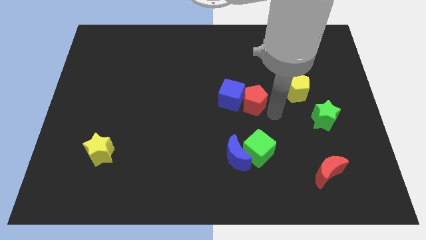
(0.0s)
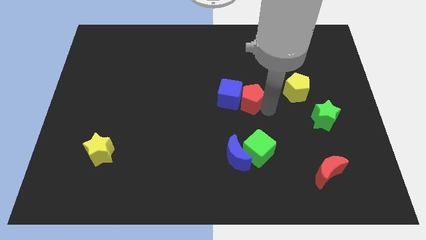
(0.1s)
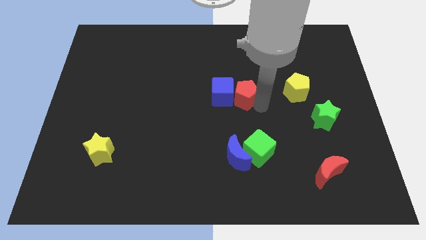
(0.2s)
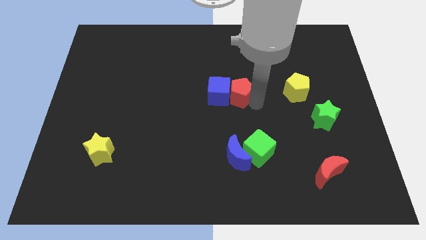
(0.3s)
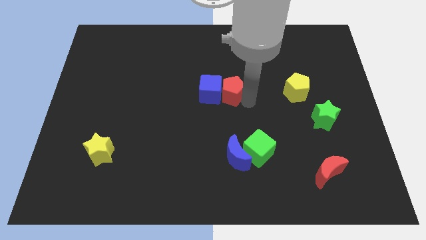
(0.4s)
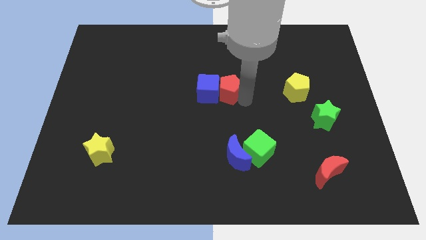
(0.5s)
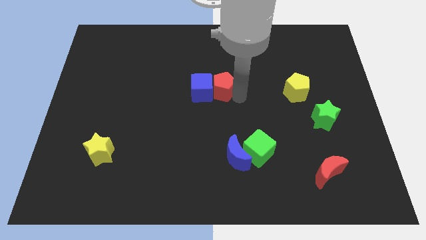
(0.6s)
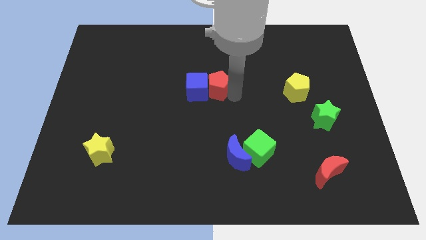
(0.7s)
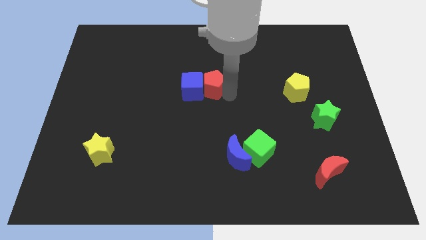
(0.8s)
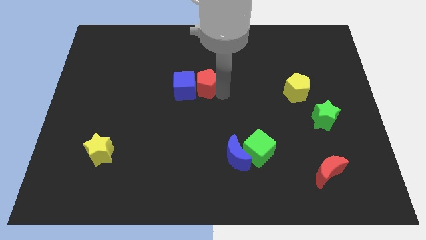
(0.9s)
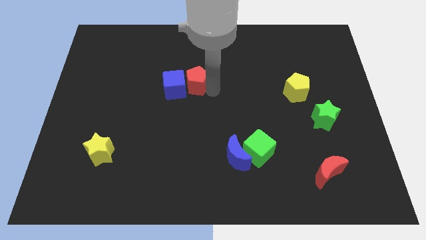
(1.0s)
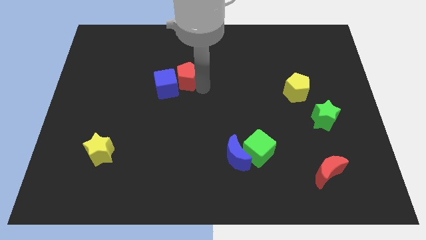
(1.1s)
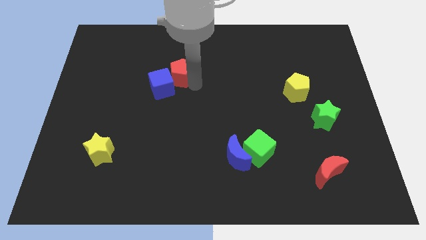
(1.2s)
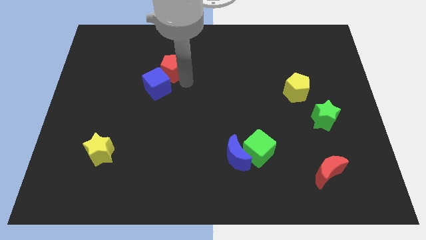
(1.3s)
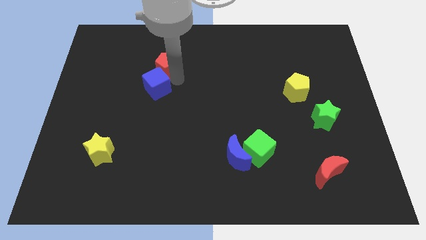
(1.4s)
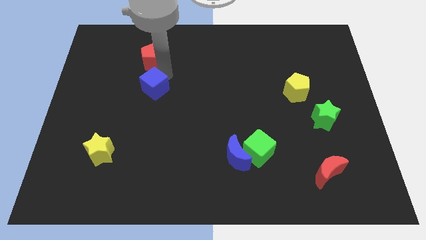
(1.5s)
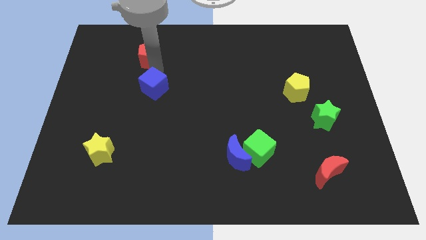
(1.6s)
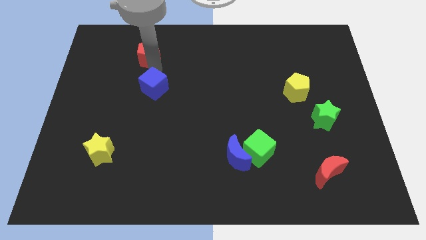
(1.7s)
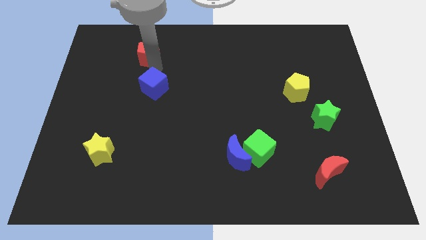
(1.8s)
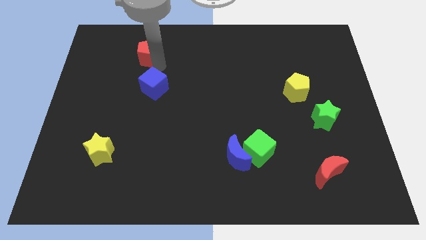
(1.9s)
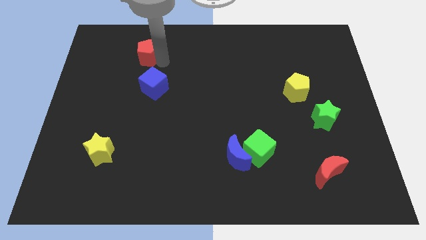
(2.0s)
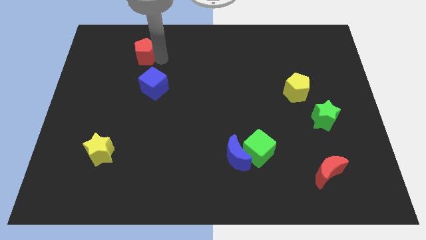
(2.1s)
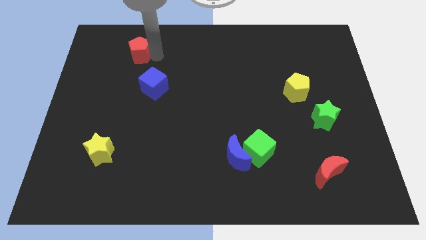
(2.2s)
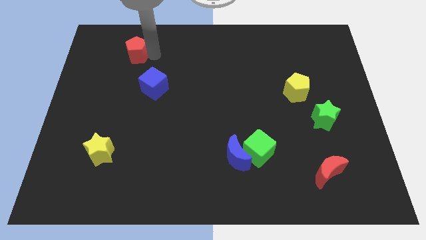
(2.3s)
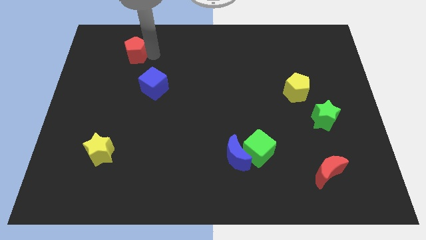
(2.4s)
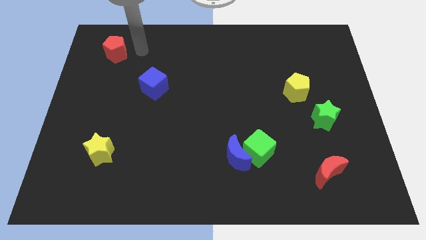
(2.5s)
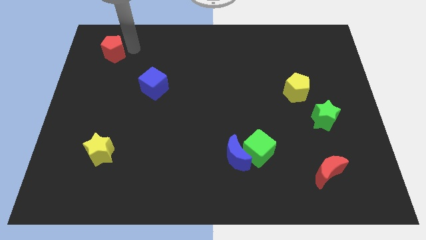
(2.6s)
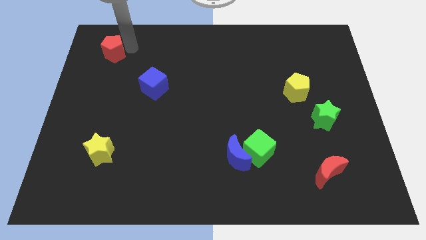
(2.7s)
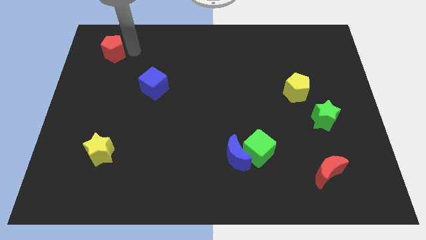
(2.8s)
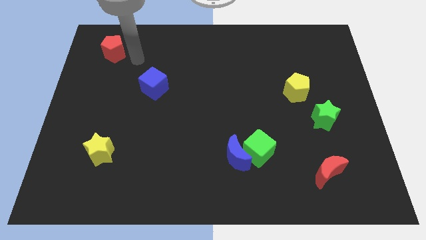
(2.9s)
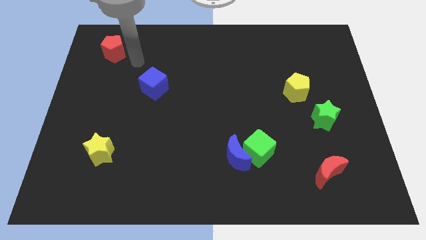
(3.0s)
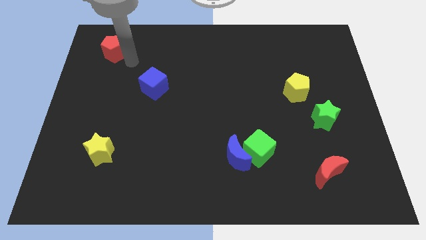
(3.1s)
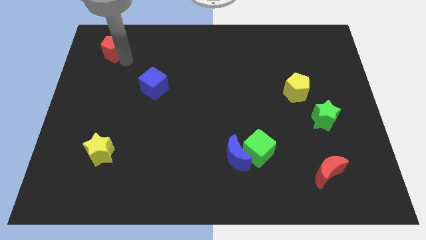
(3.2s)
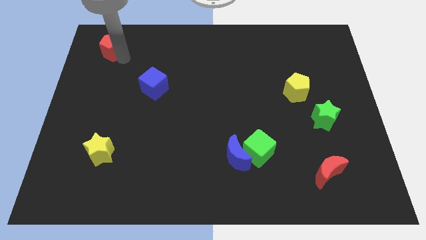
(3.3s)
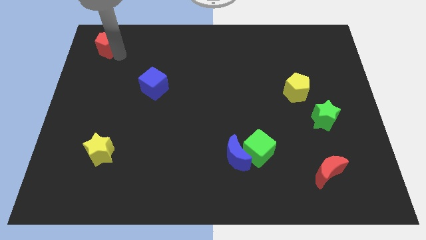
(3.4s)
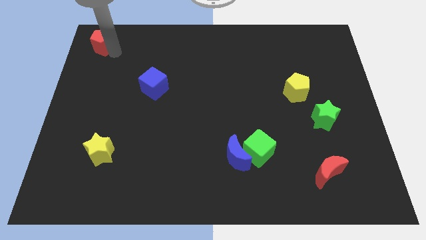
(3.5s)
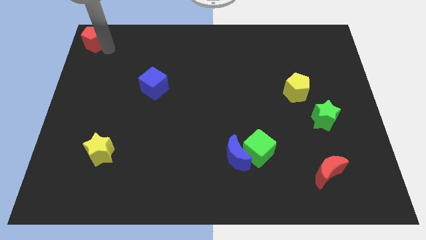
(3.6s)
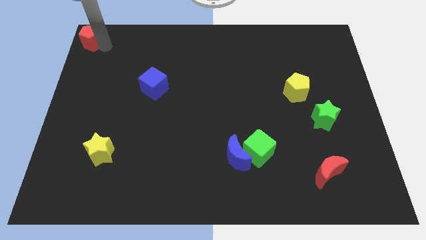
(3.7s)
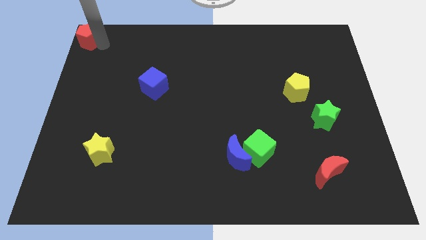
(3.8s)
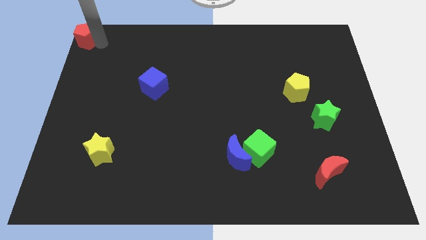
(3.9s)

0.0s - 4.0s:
slide the red pentagon to the top left side of the table

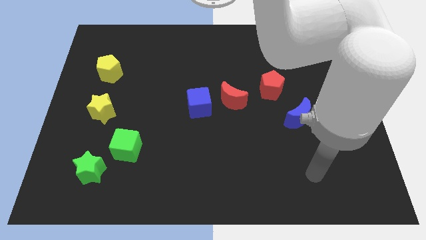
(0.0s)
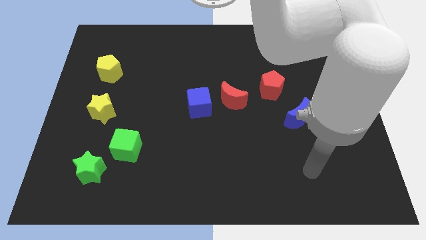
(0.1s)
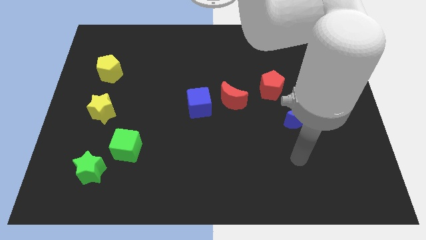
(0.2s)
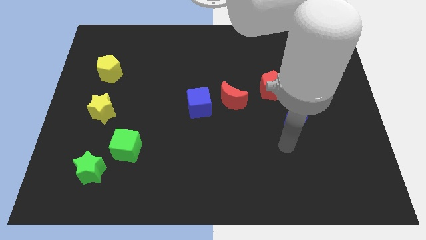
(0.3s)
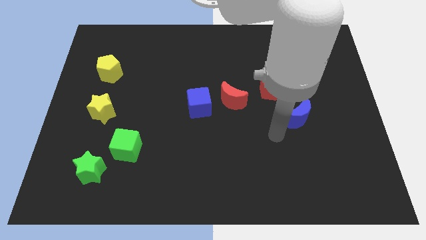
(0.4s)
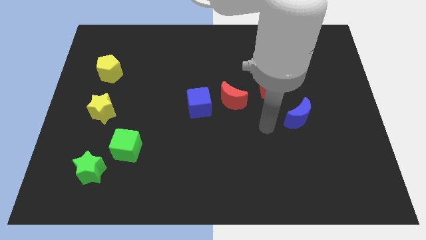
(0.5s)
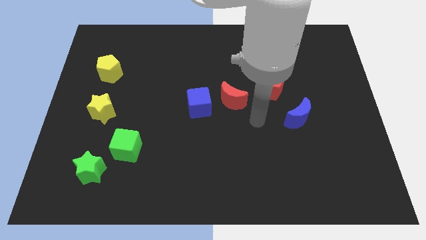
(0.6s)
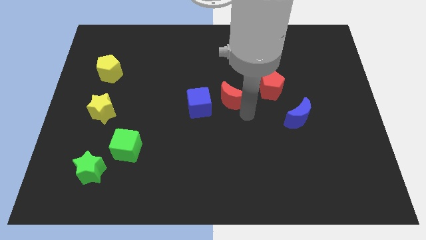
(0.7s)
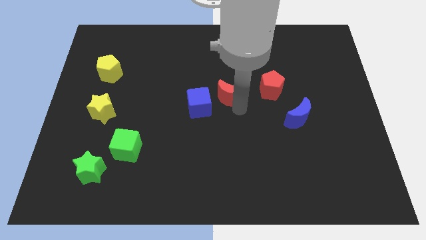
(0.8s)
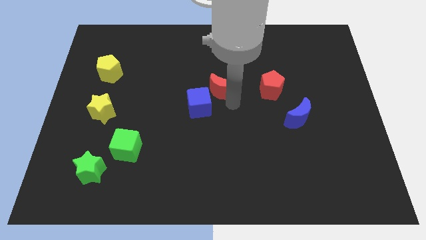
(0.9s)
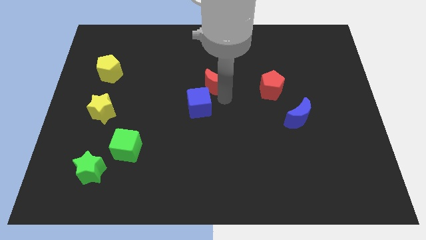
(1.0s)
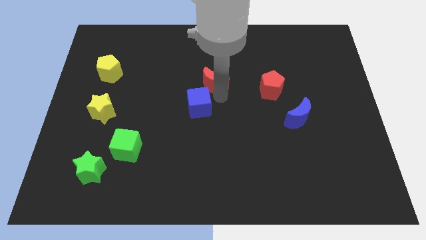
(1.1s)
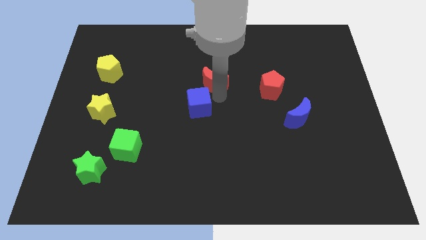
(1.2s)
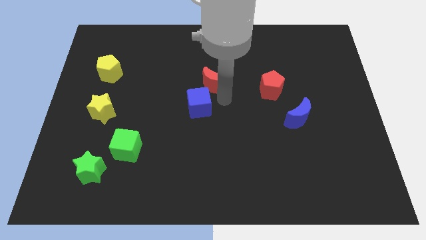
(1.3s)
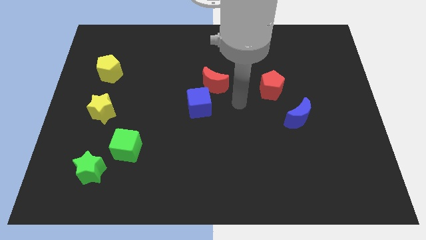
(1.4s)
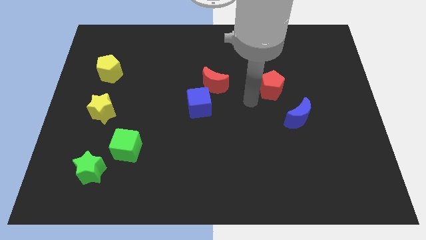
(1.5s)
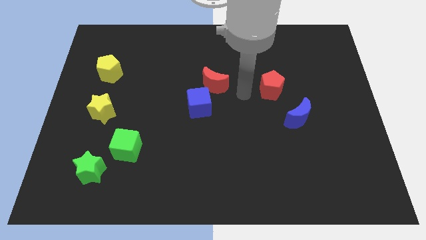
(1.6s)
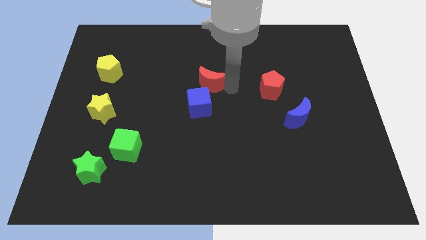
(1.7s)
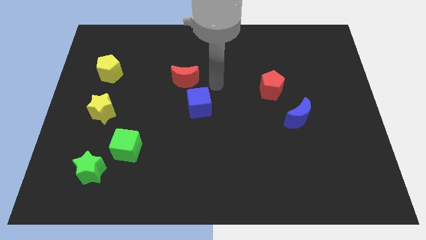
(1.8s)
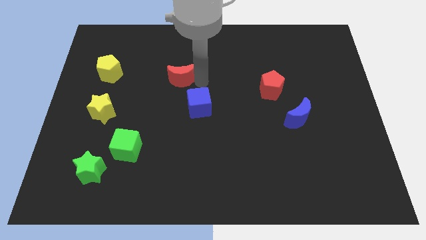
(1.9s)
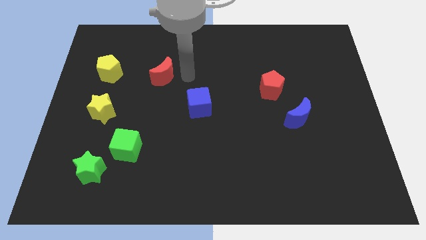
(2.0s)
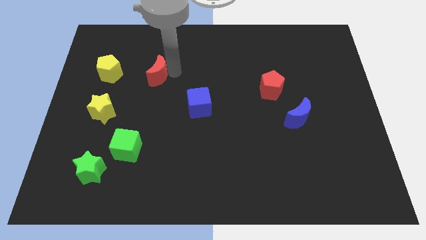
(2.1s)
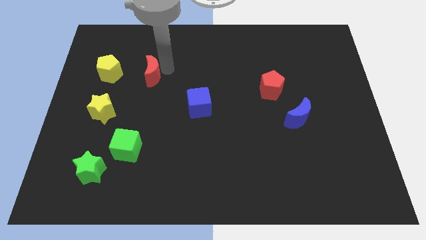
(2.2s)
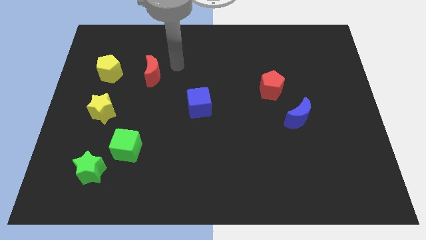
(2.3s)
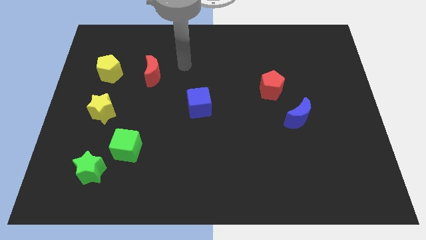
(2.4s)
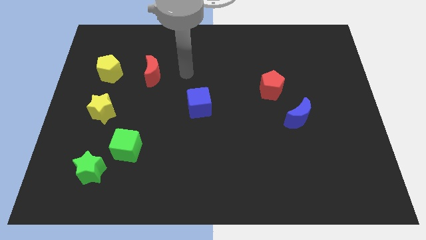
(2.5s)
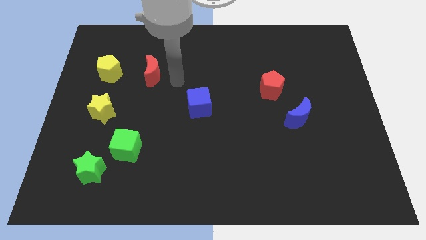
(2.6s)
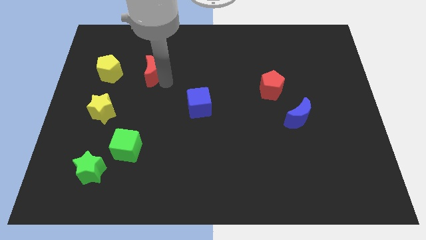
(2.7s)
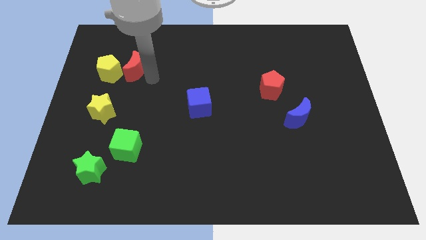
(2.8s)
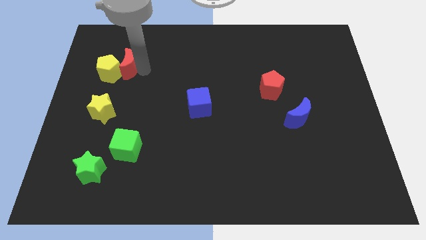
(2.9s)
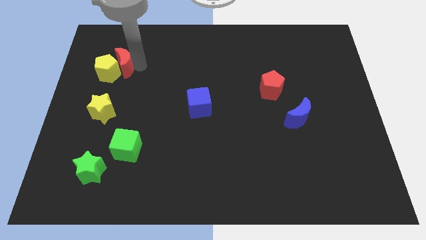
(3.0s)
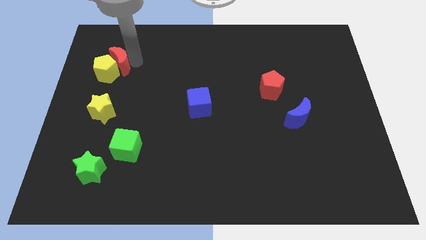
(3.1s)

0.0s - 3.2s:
place red moon right to yellow pentagon

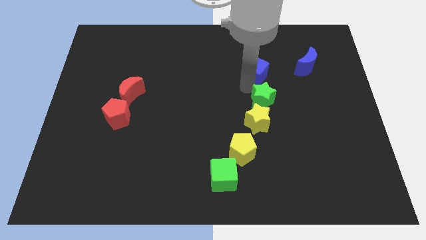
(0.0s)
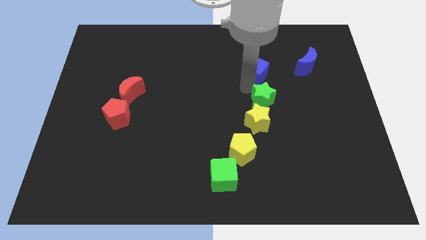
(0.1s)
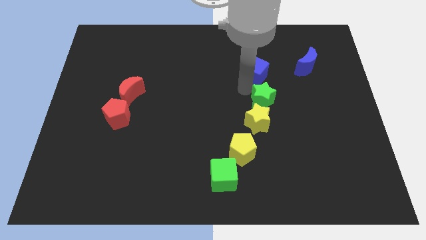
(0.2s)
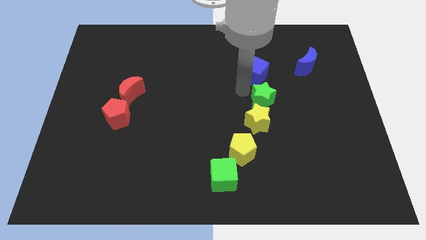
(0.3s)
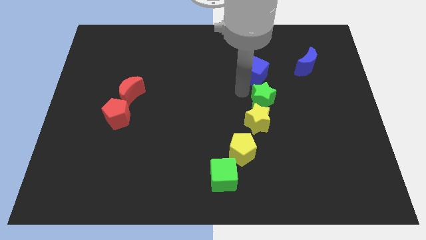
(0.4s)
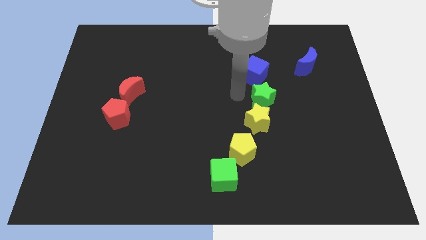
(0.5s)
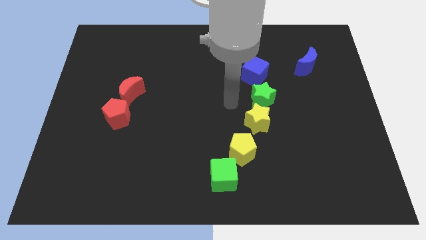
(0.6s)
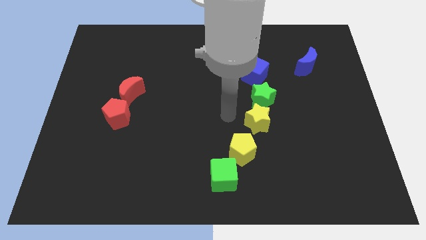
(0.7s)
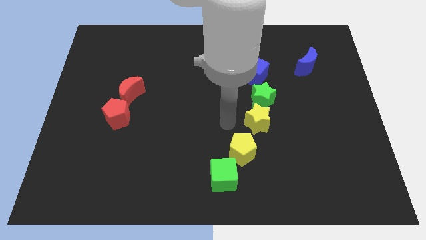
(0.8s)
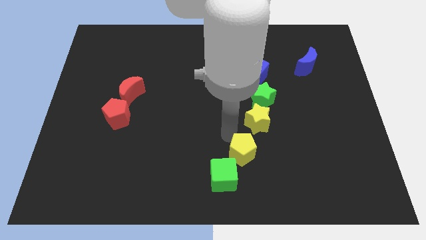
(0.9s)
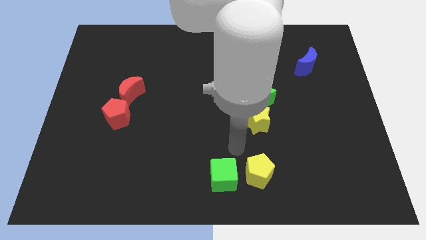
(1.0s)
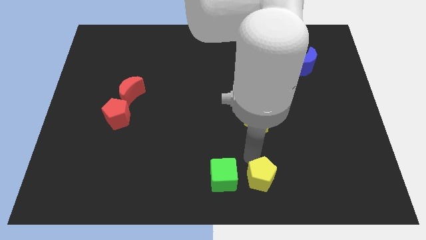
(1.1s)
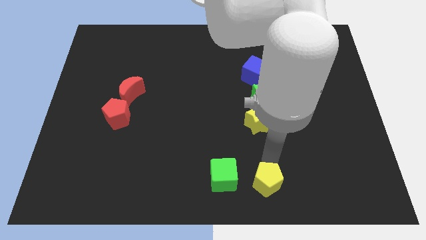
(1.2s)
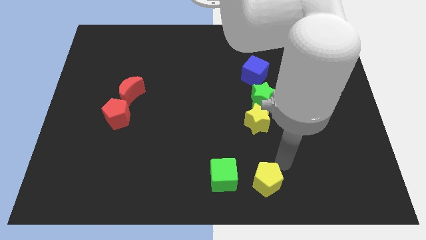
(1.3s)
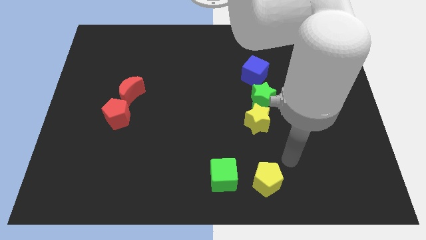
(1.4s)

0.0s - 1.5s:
place the yellow pentagon right to the green cube

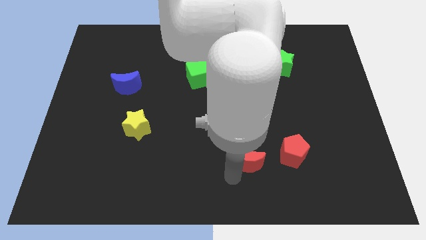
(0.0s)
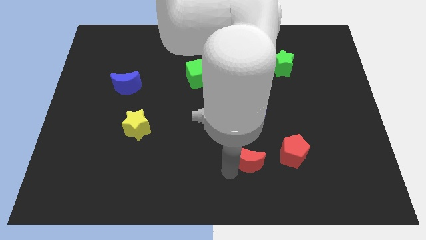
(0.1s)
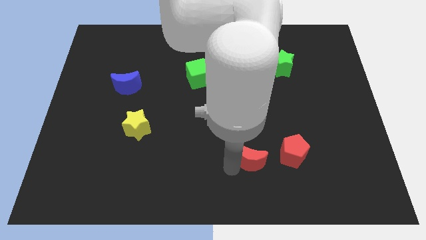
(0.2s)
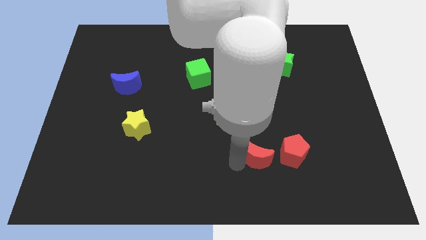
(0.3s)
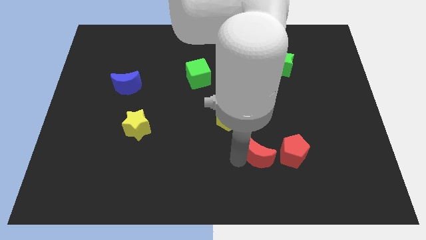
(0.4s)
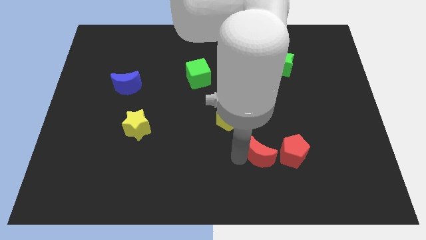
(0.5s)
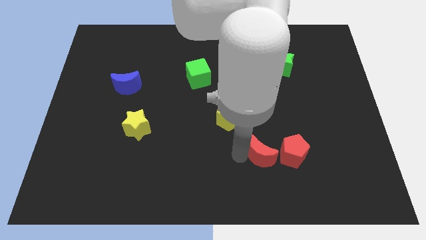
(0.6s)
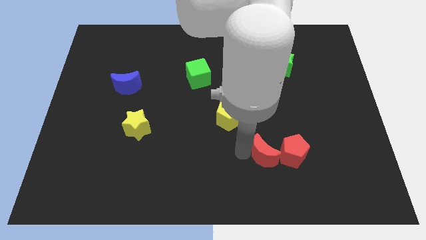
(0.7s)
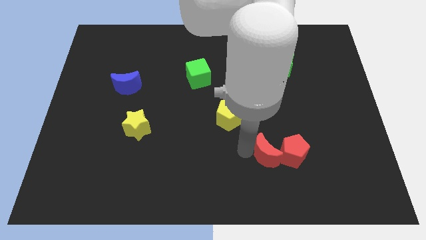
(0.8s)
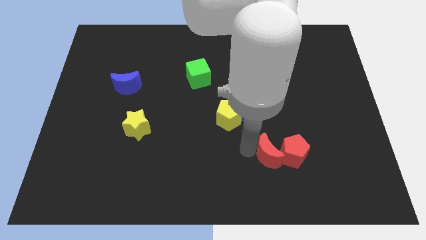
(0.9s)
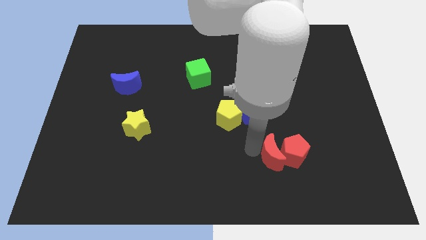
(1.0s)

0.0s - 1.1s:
move the red pentagon into the red pentagon
